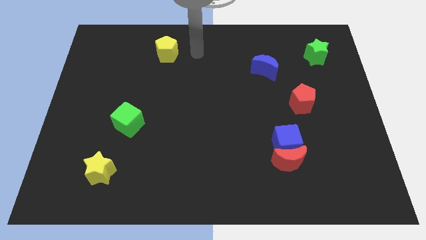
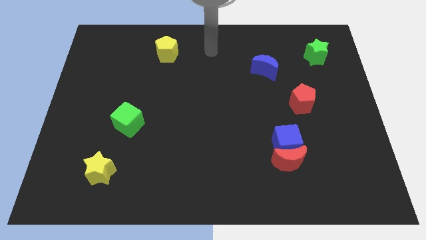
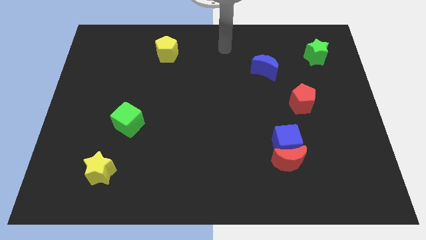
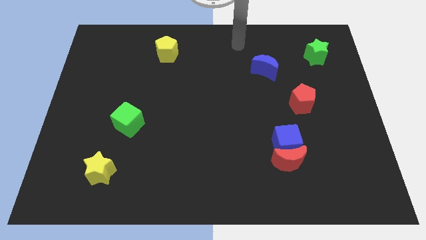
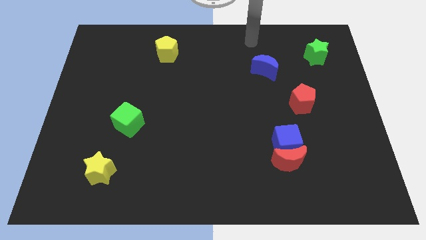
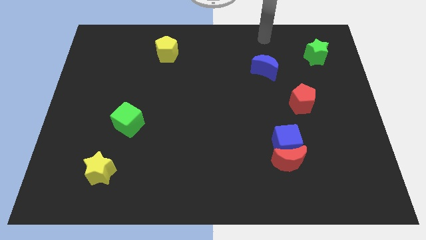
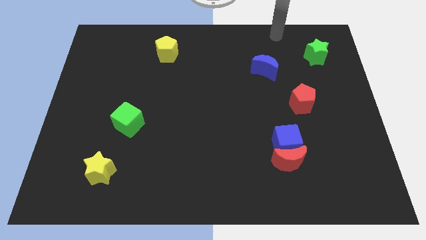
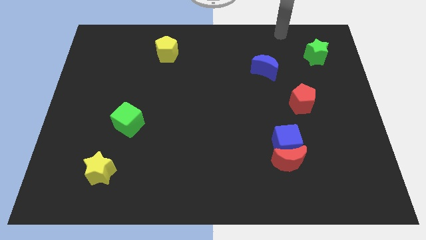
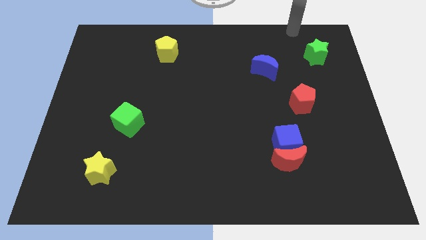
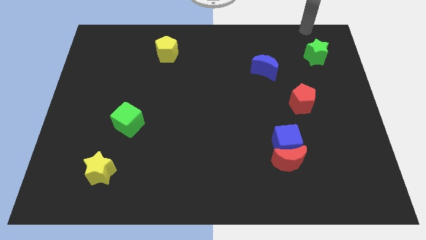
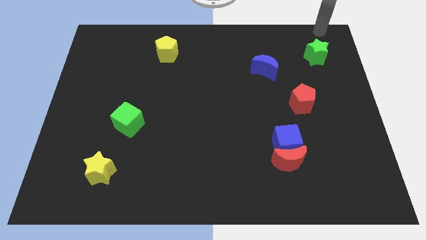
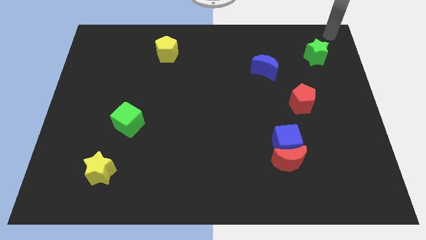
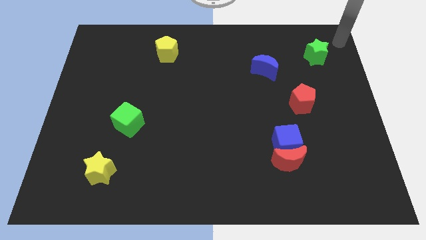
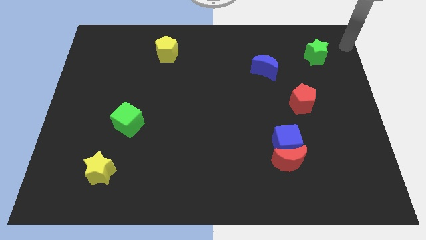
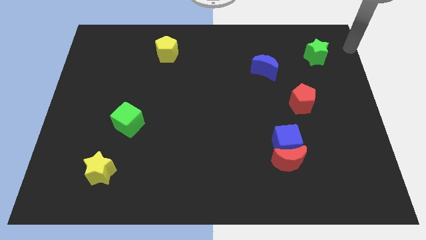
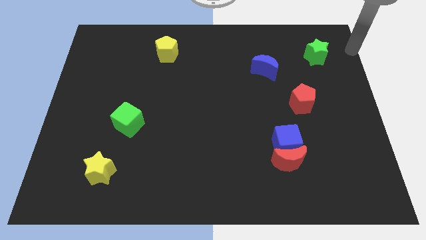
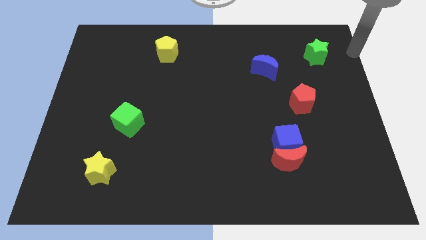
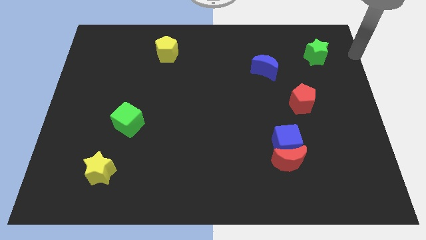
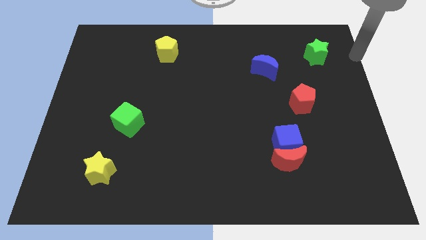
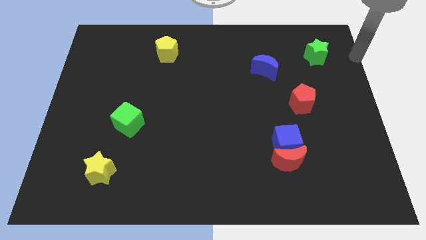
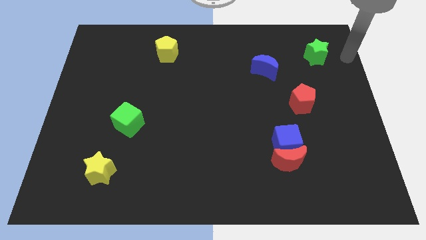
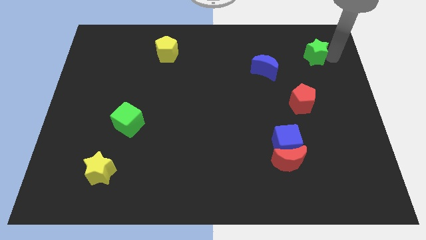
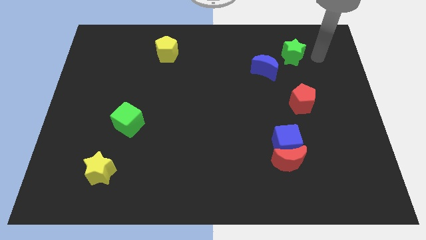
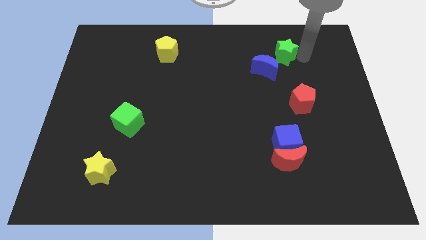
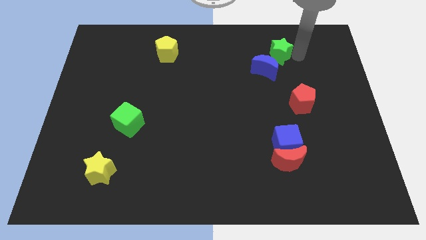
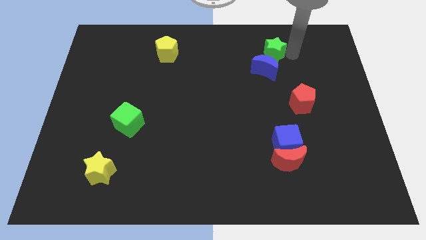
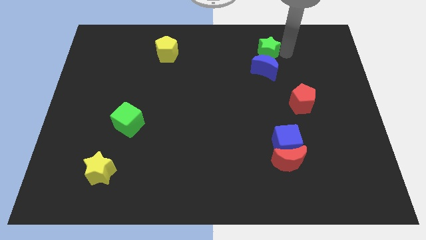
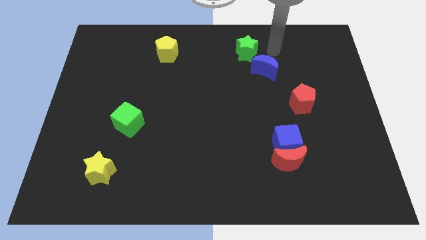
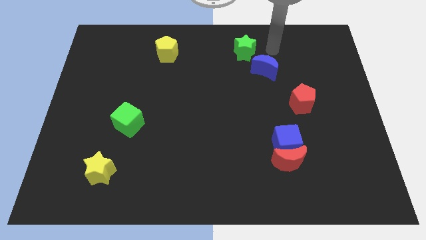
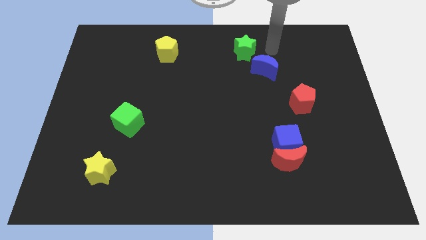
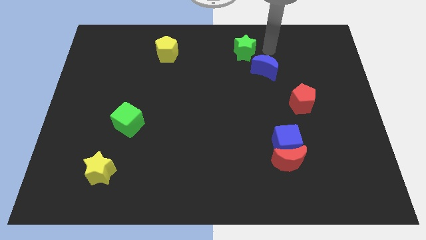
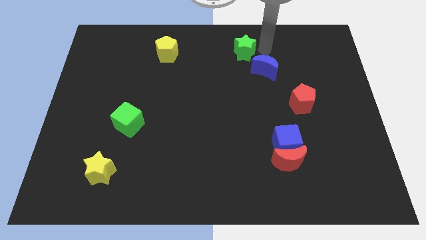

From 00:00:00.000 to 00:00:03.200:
move the green star towards yellow pentagon

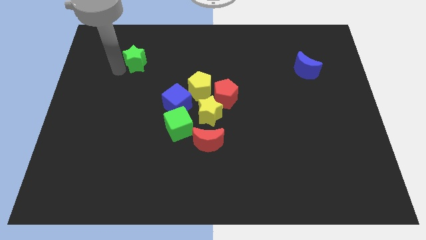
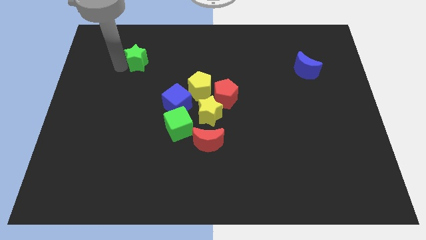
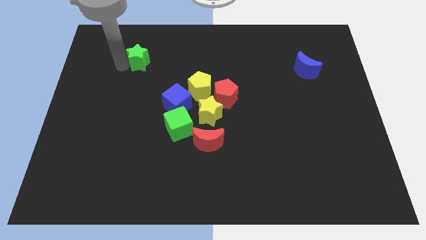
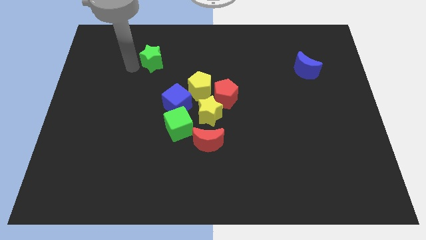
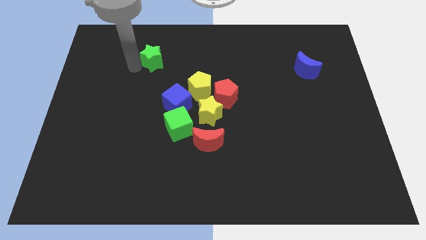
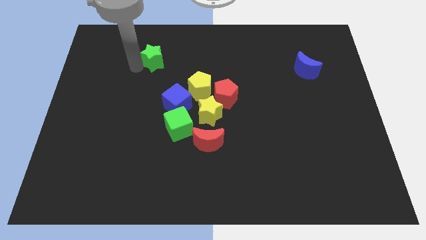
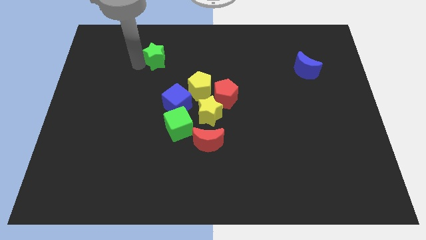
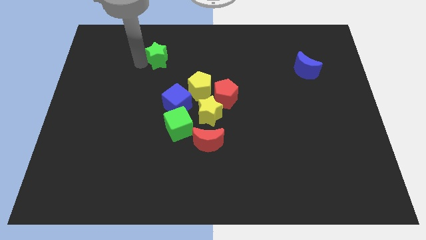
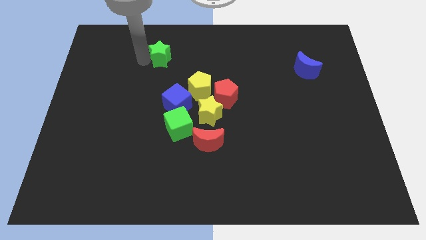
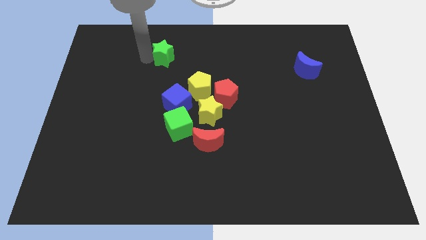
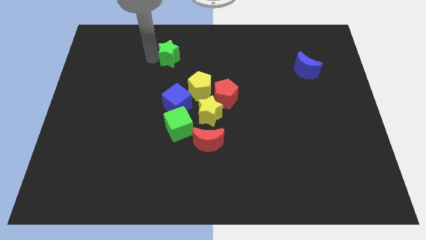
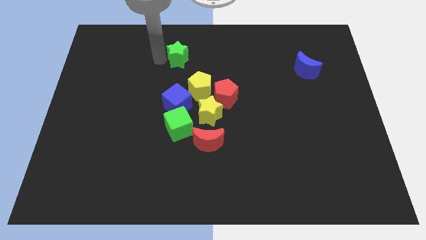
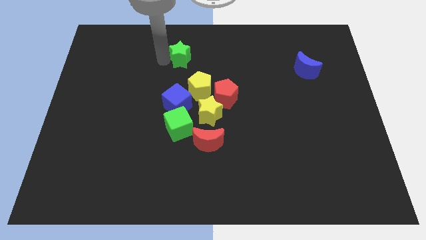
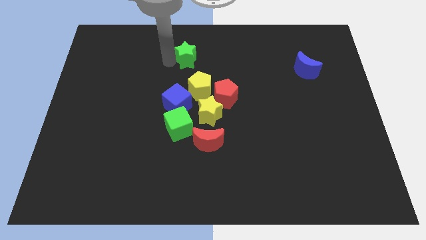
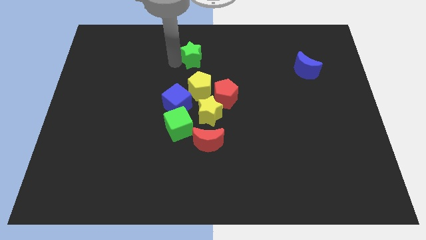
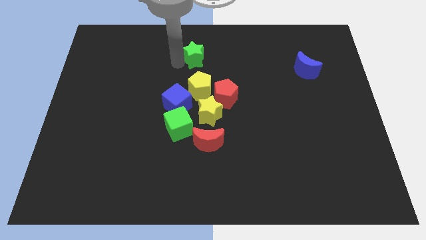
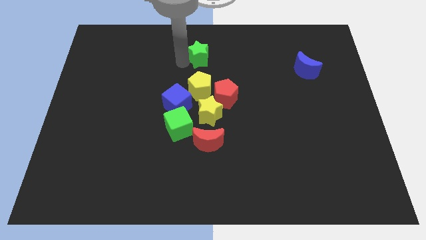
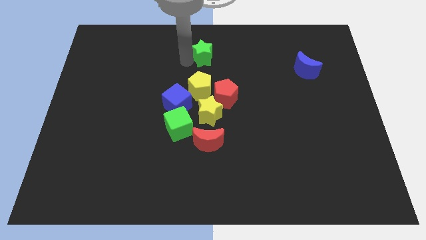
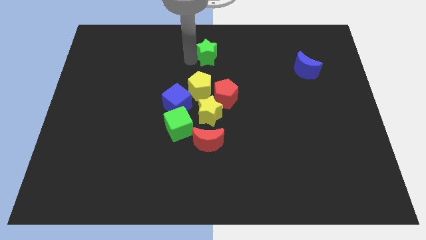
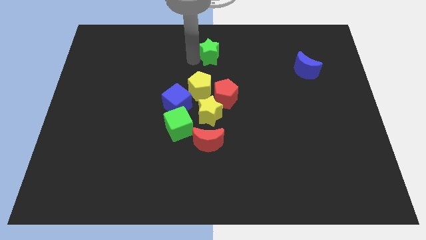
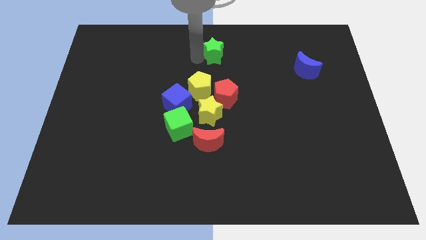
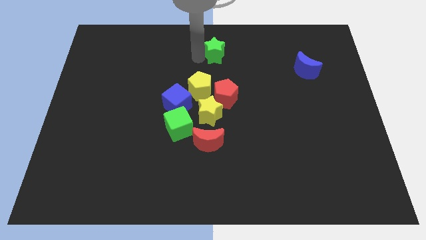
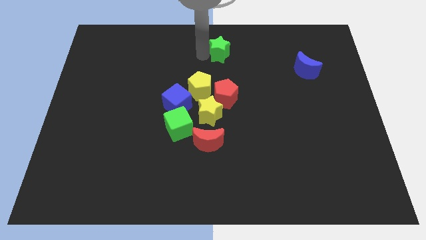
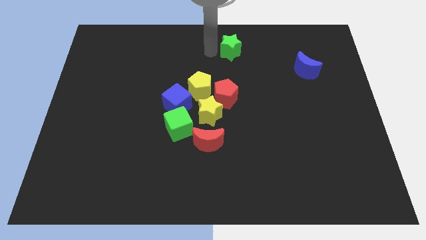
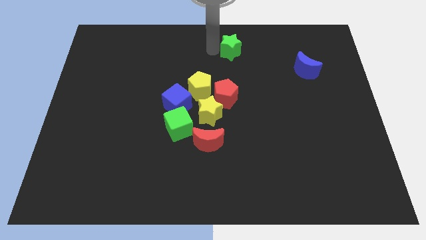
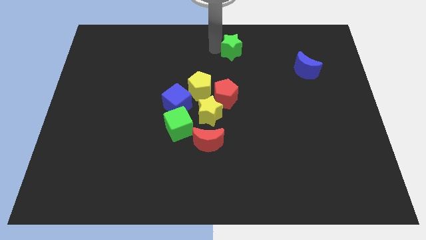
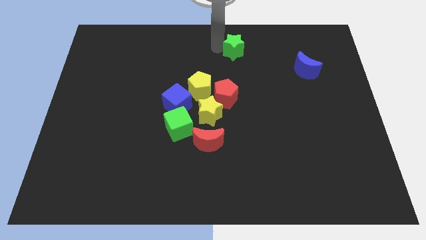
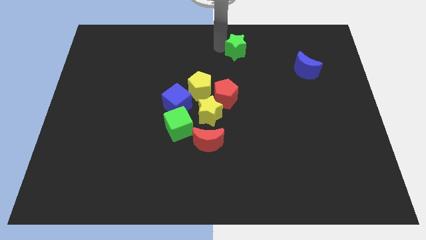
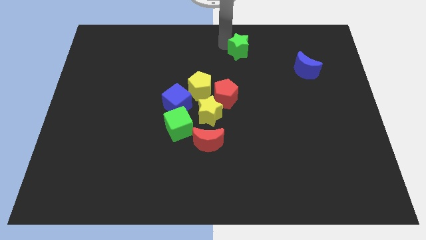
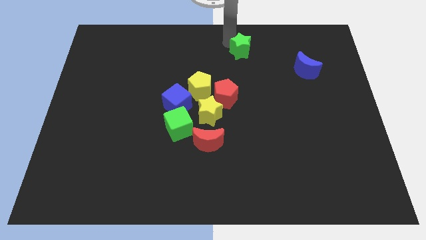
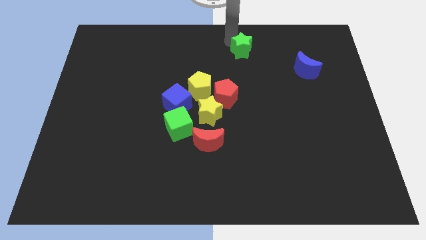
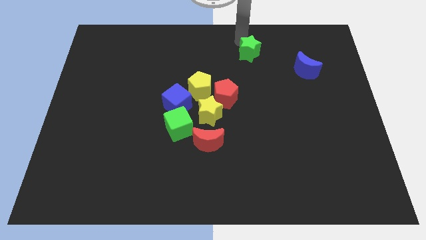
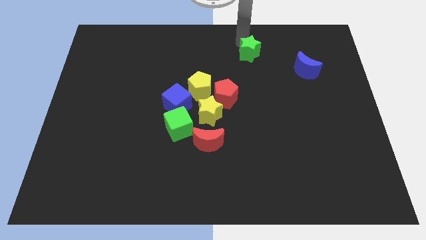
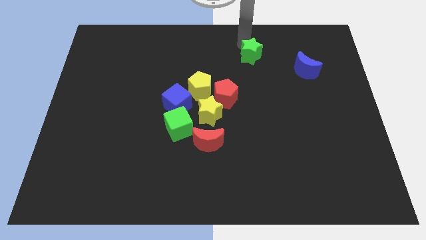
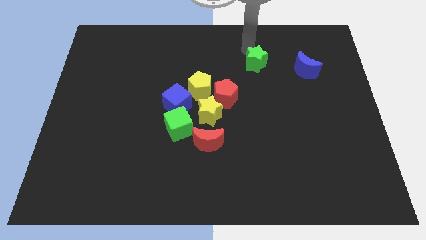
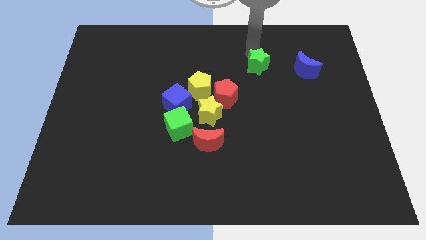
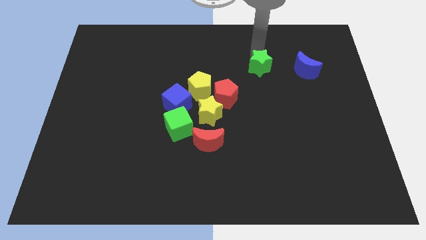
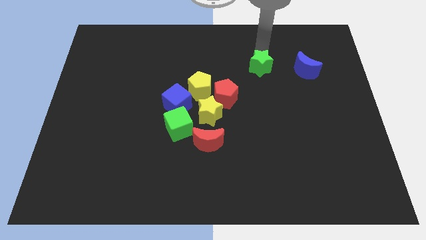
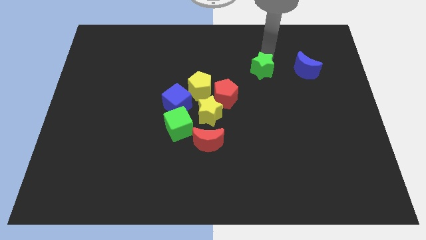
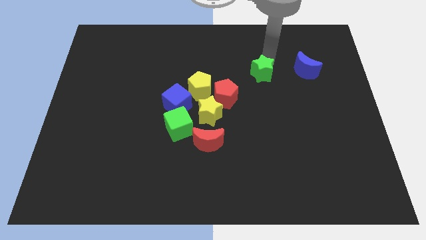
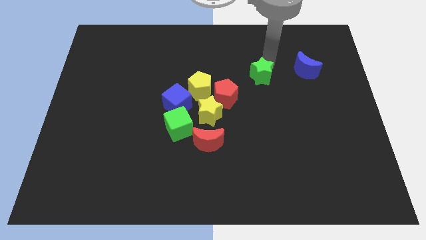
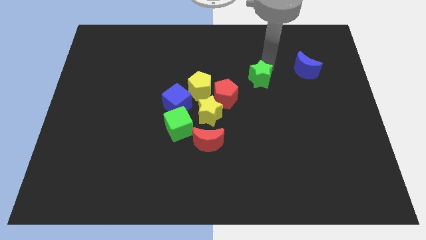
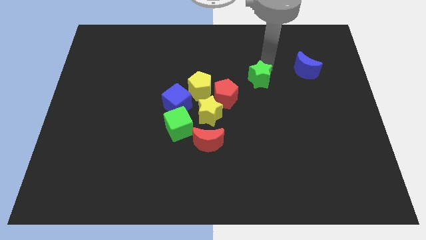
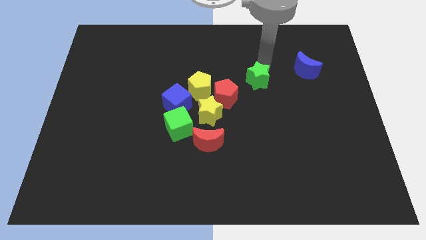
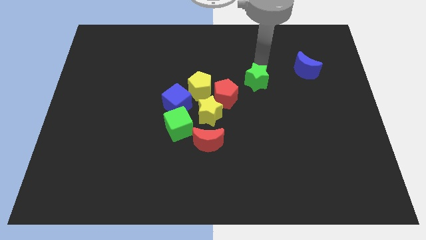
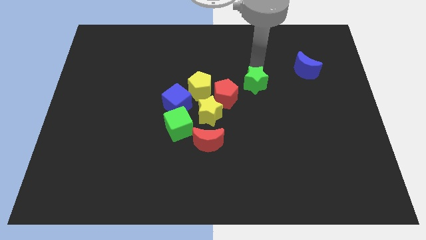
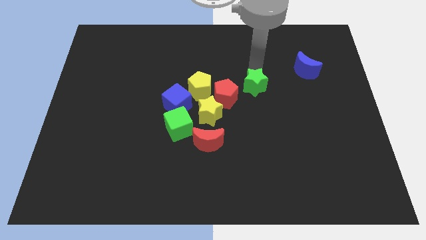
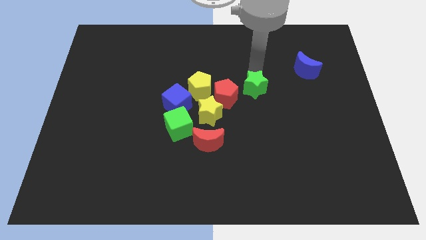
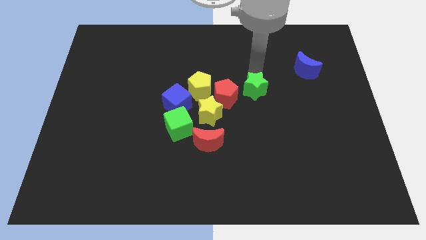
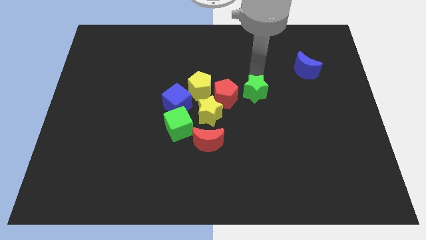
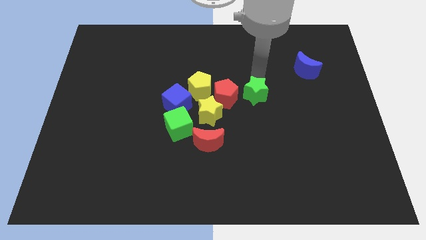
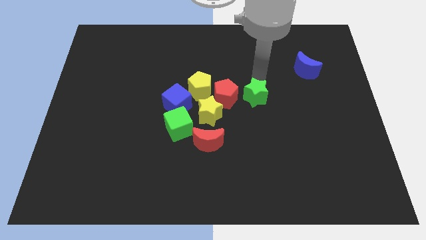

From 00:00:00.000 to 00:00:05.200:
place the green star to the right side of the red pentagon

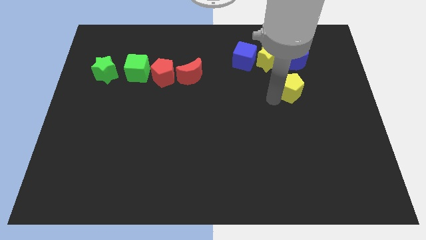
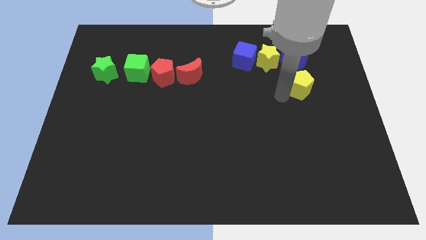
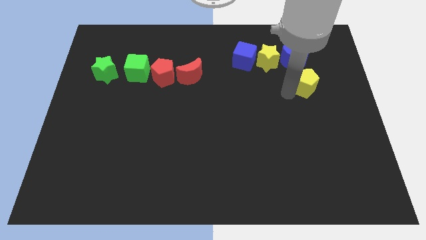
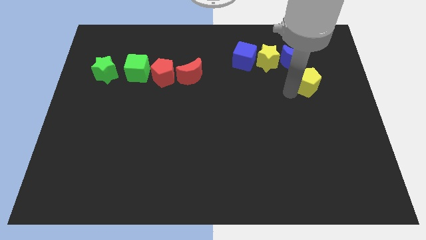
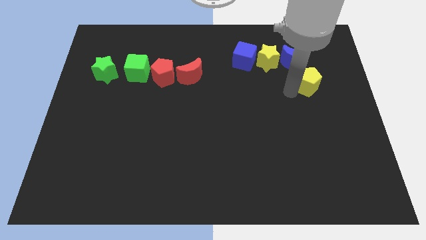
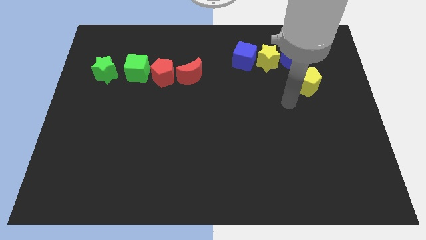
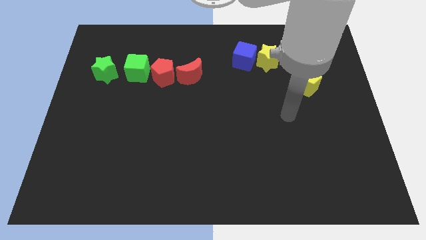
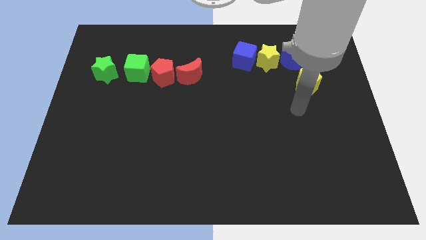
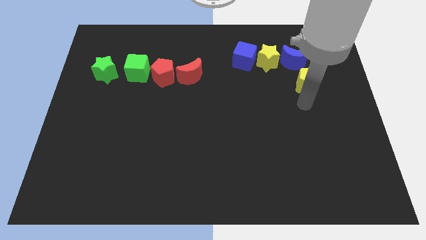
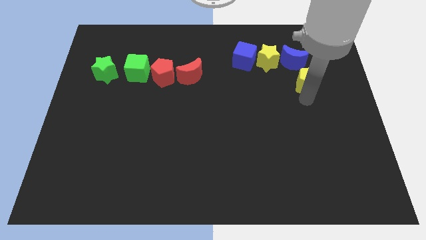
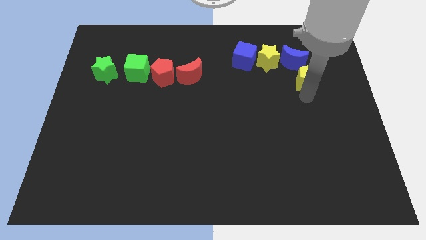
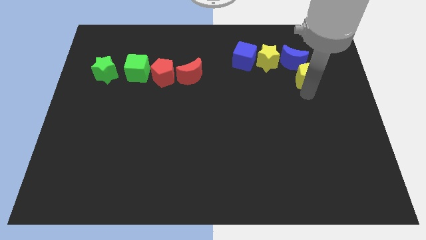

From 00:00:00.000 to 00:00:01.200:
place the yellow pentagon to the bottom side of the blue moon
